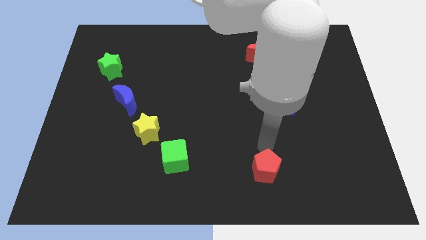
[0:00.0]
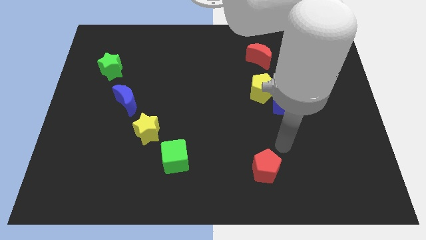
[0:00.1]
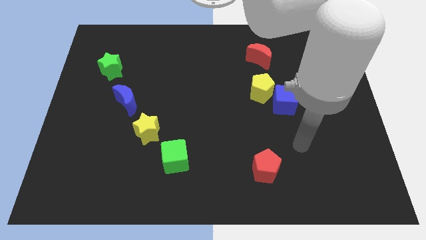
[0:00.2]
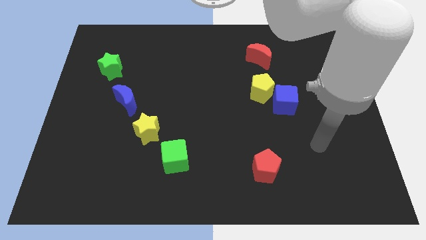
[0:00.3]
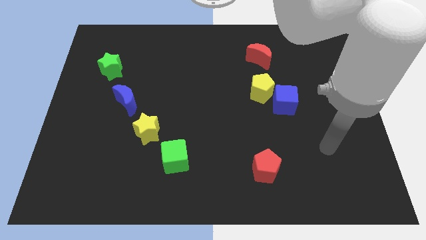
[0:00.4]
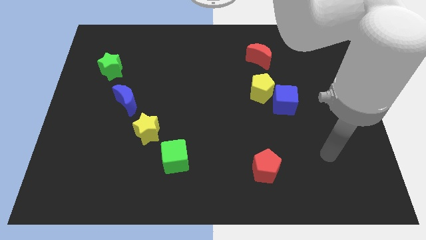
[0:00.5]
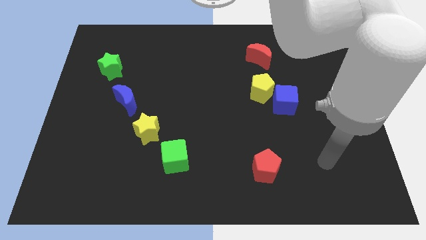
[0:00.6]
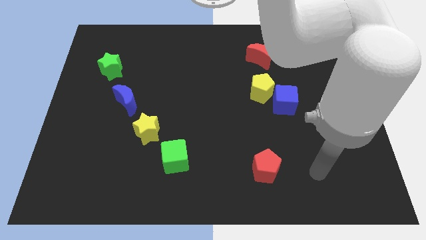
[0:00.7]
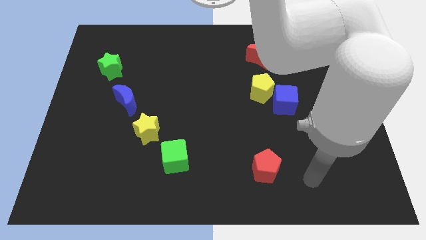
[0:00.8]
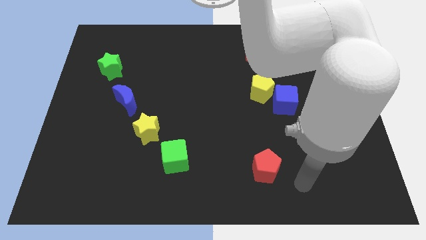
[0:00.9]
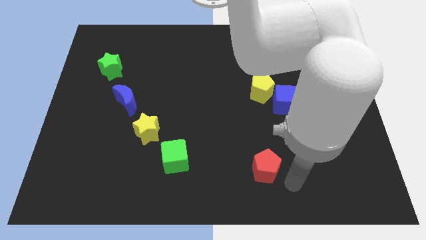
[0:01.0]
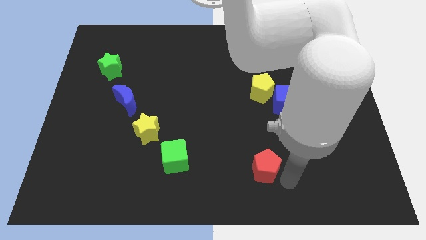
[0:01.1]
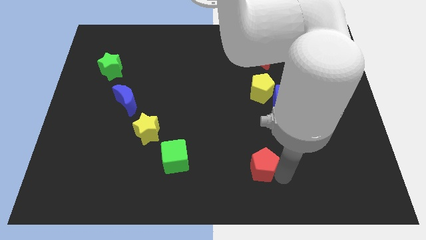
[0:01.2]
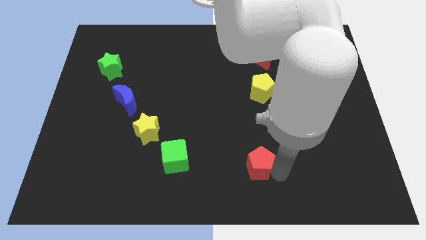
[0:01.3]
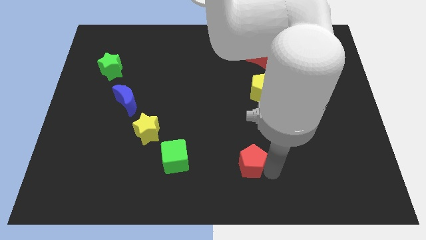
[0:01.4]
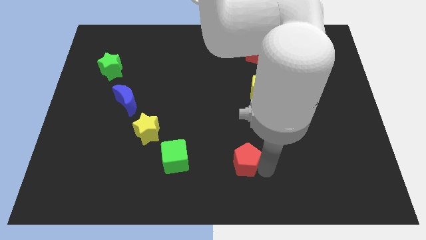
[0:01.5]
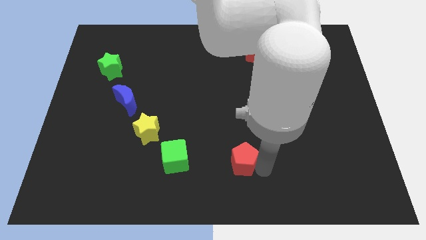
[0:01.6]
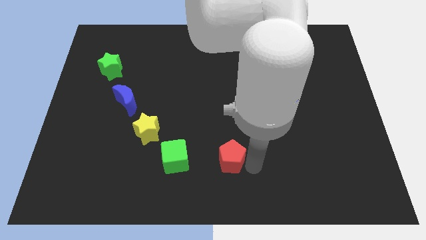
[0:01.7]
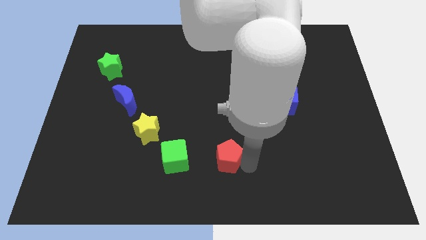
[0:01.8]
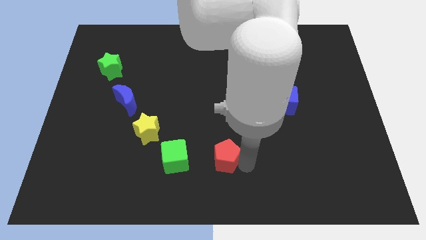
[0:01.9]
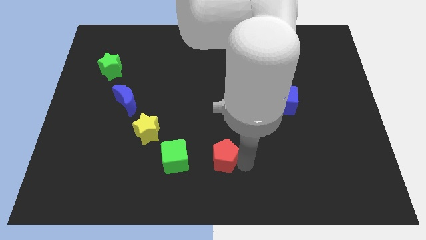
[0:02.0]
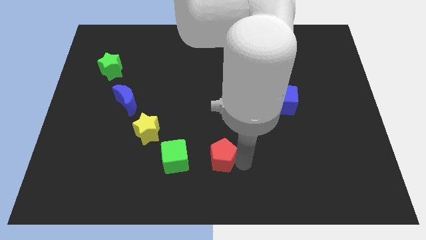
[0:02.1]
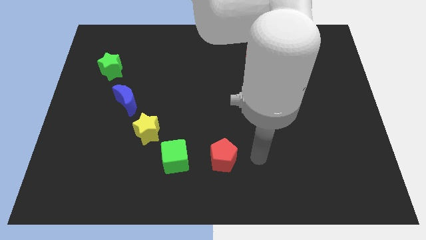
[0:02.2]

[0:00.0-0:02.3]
align the red pentagon with green cube in a horizontal line

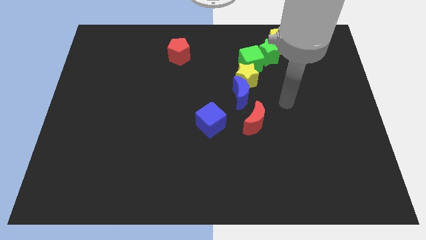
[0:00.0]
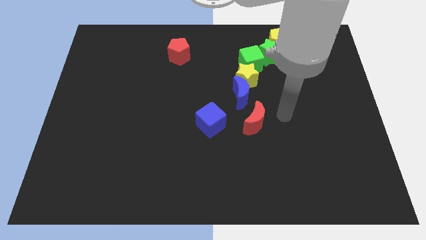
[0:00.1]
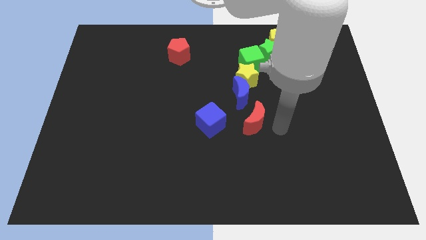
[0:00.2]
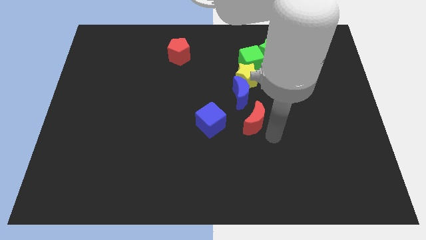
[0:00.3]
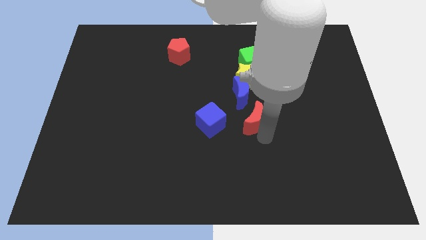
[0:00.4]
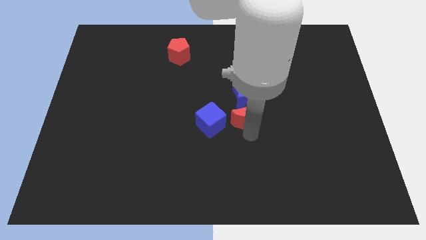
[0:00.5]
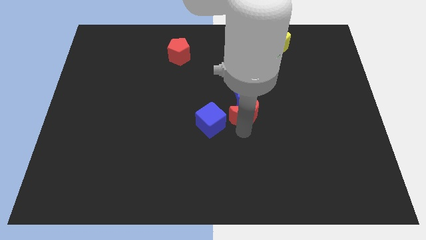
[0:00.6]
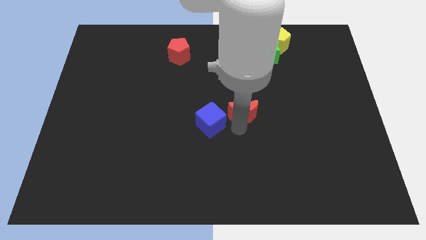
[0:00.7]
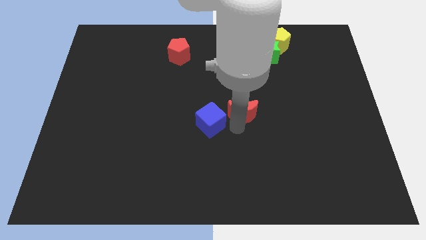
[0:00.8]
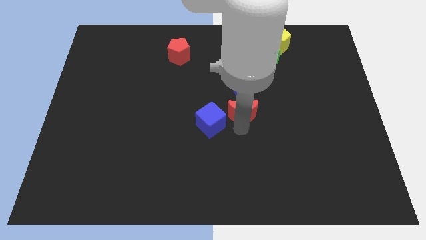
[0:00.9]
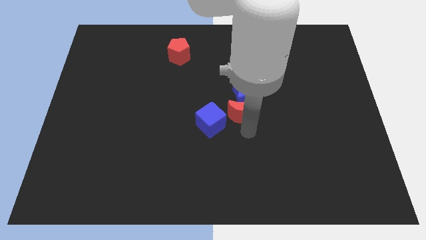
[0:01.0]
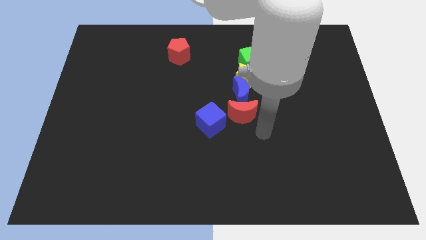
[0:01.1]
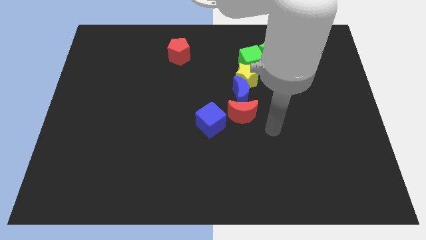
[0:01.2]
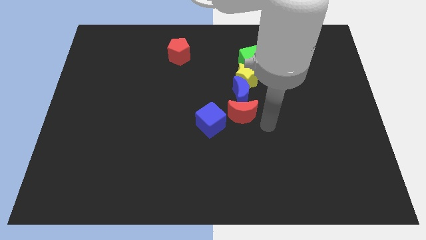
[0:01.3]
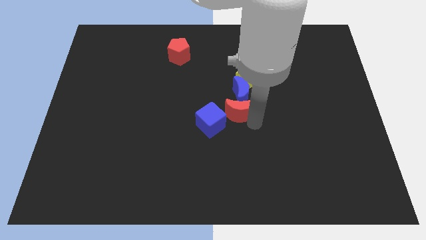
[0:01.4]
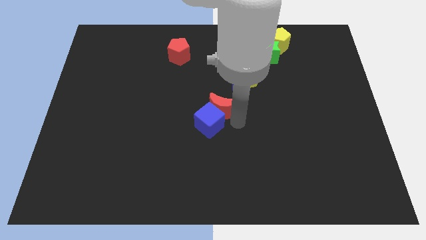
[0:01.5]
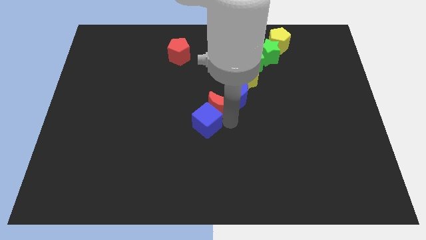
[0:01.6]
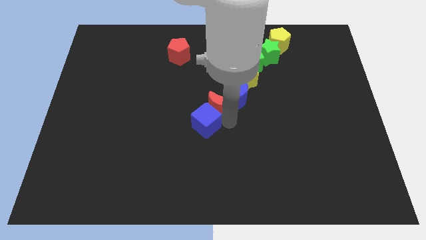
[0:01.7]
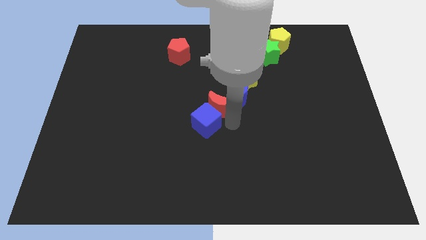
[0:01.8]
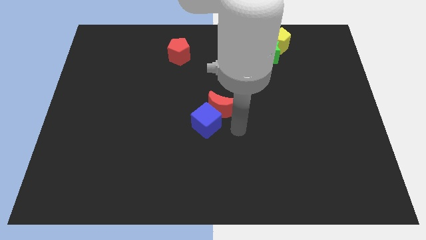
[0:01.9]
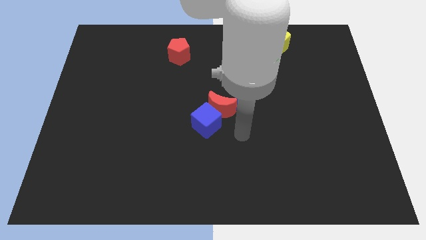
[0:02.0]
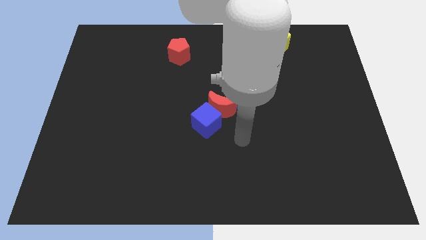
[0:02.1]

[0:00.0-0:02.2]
place red moon in between blue blocks

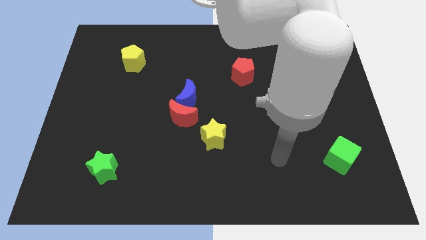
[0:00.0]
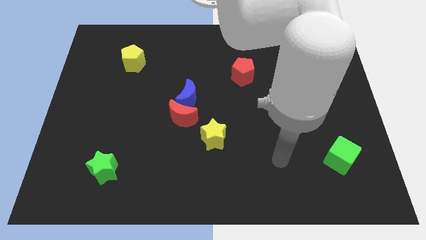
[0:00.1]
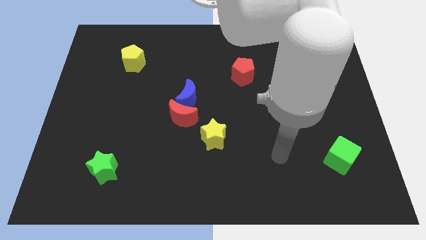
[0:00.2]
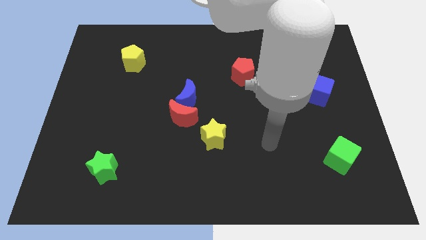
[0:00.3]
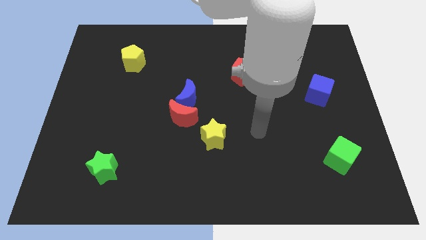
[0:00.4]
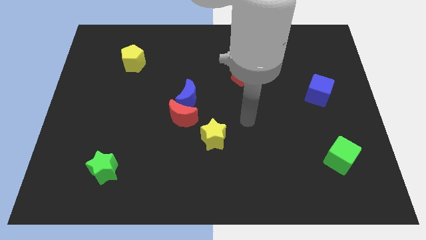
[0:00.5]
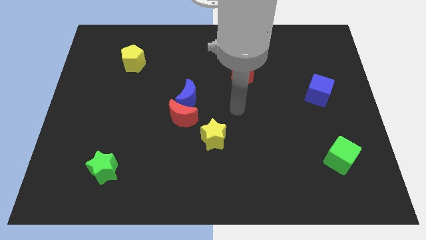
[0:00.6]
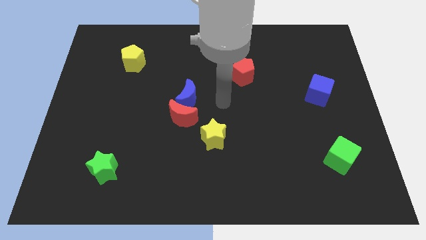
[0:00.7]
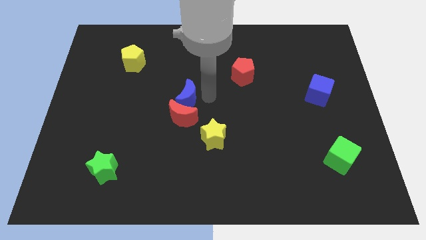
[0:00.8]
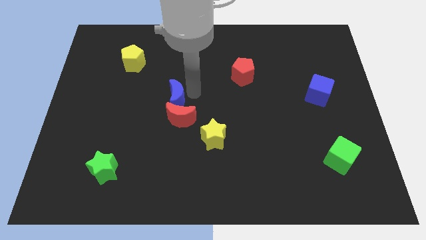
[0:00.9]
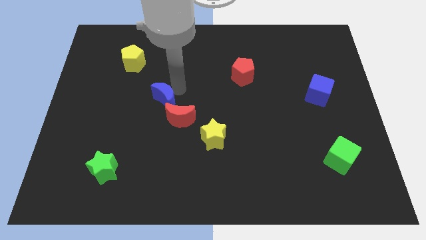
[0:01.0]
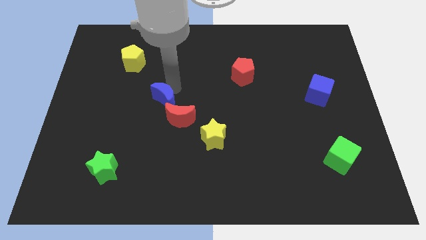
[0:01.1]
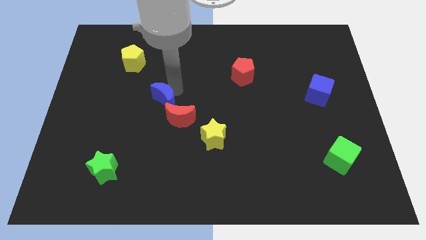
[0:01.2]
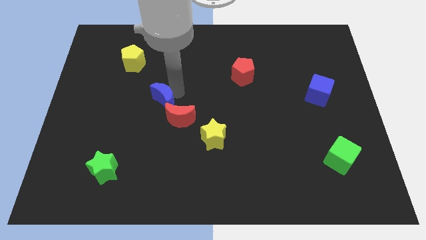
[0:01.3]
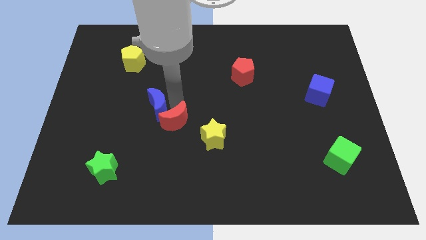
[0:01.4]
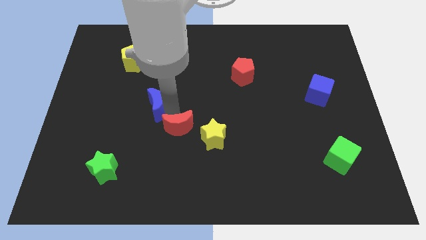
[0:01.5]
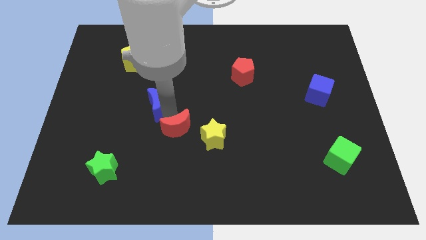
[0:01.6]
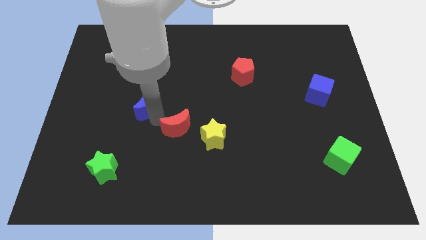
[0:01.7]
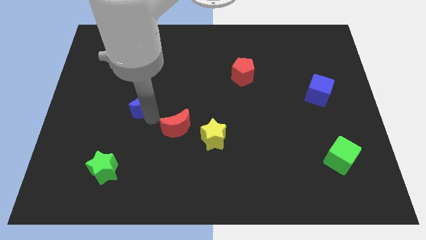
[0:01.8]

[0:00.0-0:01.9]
separate the red crescent and blue crescent

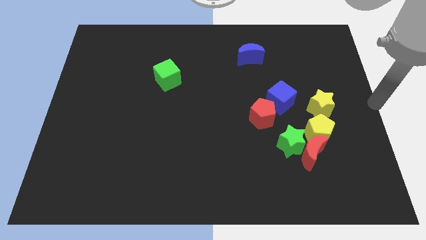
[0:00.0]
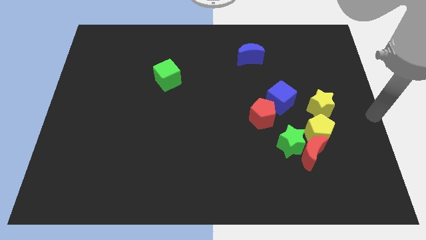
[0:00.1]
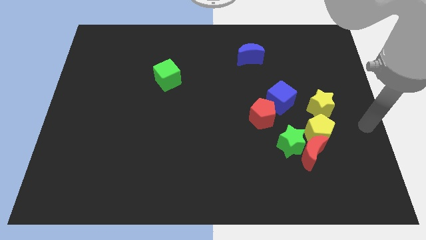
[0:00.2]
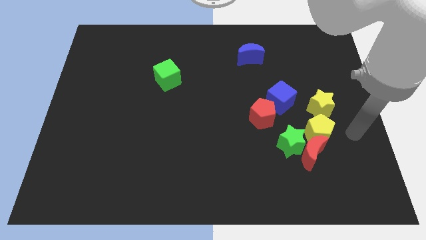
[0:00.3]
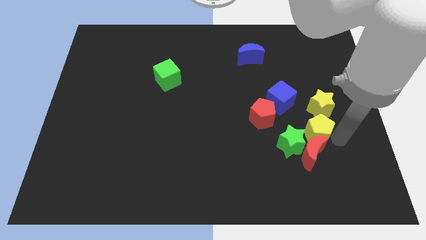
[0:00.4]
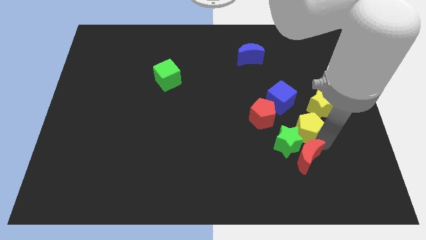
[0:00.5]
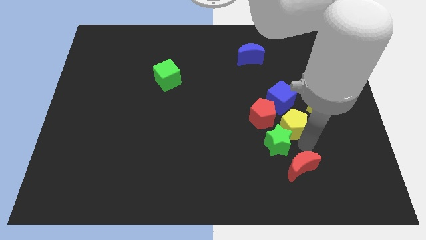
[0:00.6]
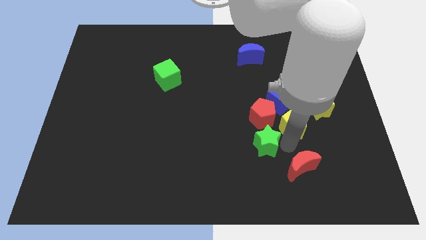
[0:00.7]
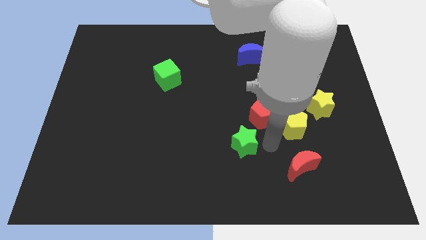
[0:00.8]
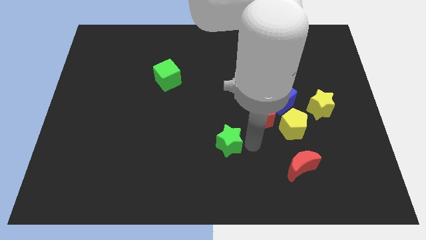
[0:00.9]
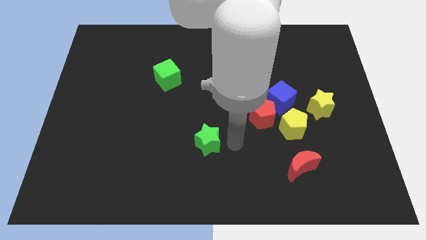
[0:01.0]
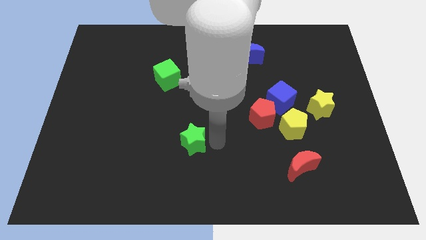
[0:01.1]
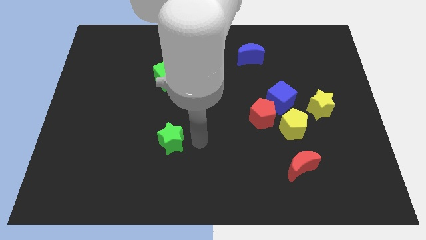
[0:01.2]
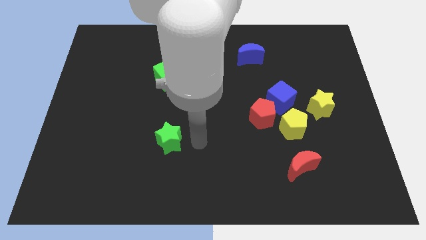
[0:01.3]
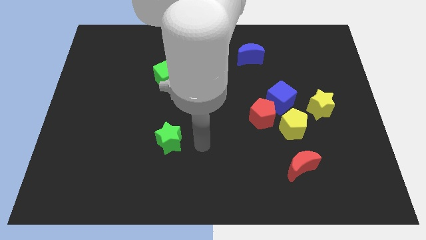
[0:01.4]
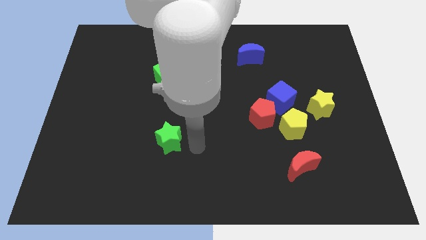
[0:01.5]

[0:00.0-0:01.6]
separate the green star from the group of blocks

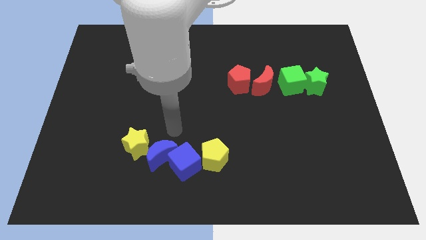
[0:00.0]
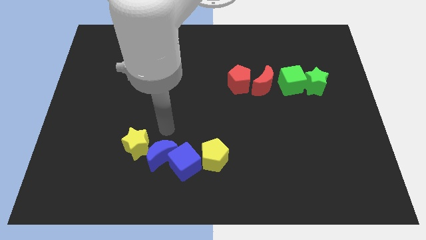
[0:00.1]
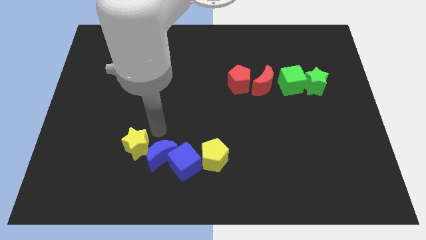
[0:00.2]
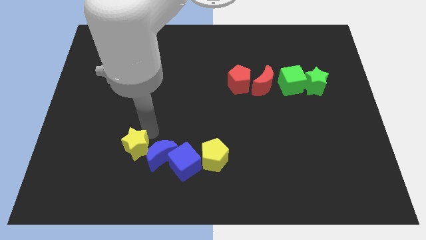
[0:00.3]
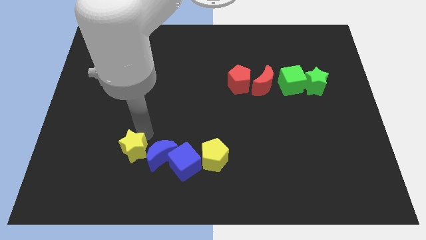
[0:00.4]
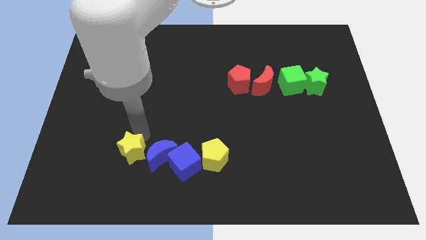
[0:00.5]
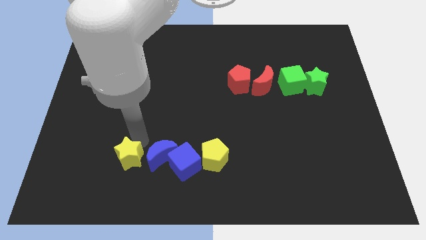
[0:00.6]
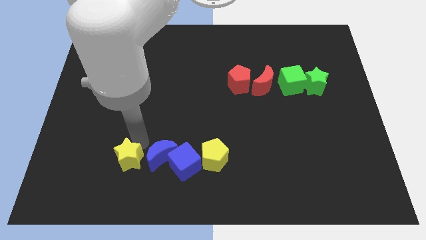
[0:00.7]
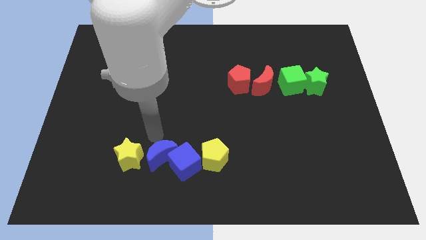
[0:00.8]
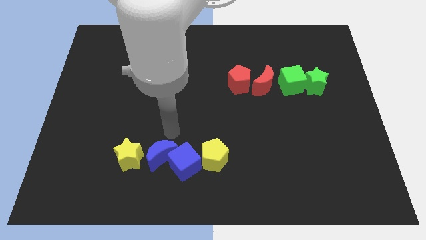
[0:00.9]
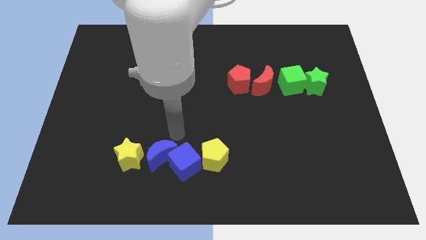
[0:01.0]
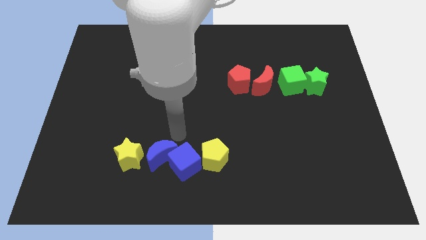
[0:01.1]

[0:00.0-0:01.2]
move the yellow star slightly down side of board
